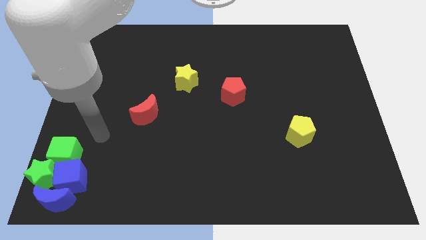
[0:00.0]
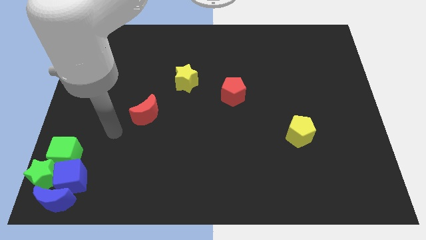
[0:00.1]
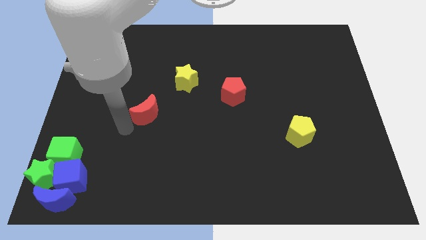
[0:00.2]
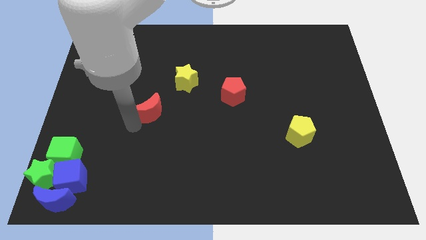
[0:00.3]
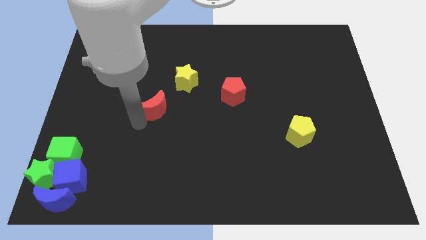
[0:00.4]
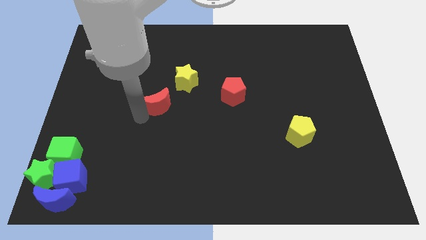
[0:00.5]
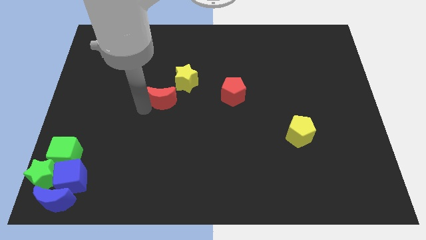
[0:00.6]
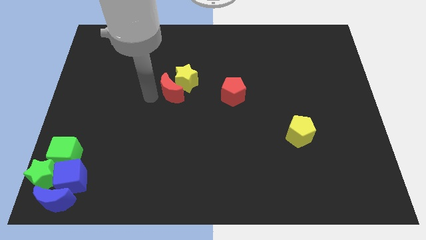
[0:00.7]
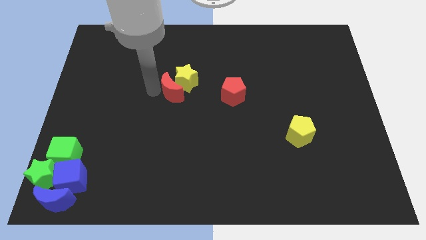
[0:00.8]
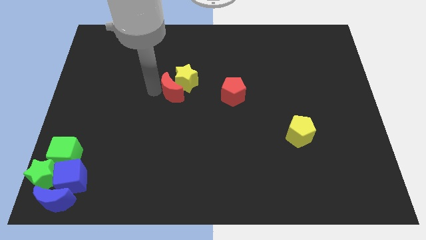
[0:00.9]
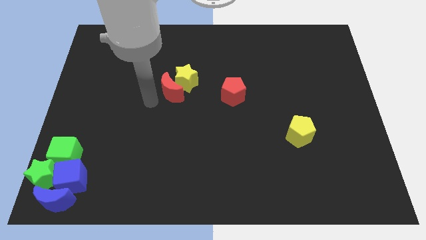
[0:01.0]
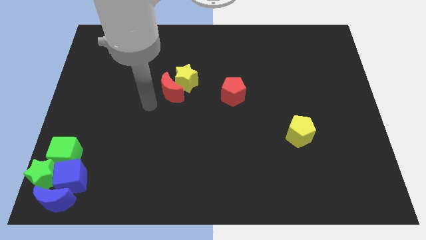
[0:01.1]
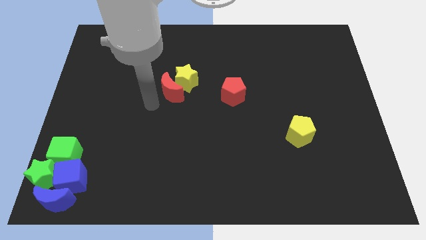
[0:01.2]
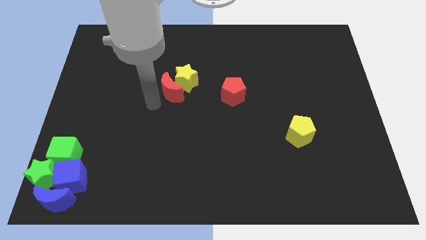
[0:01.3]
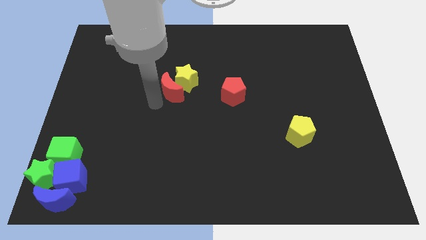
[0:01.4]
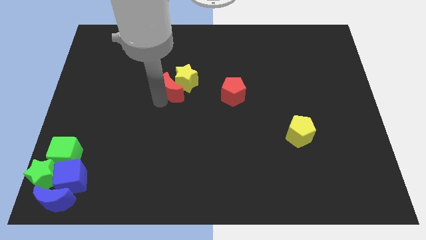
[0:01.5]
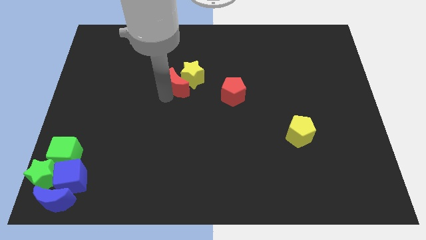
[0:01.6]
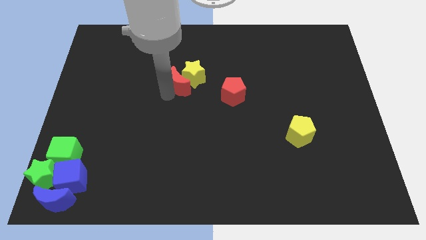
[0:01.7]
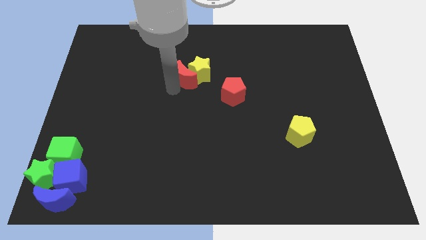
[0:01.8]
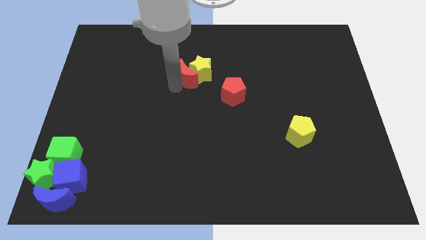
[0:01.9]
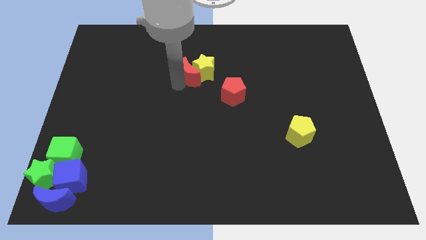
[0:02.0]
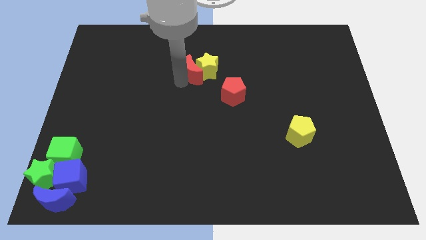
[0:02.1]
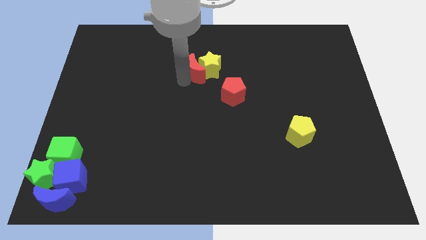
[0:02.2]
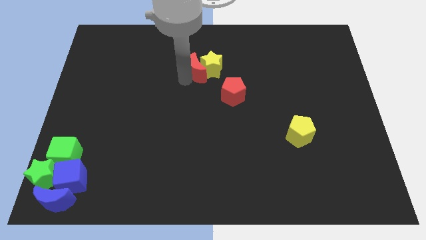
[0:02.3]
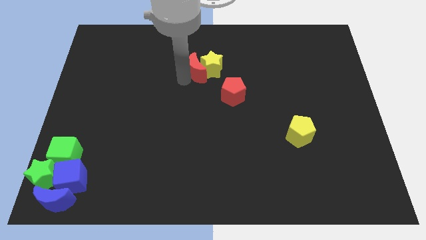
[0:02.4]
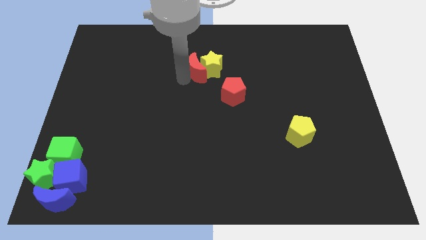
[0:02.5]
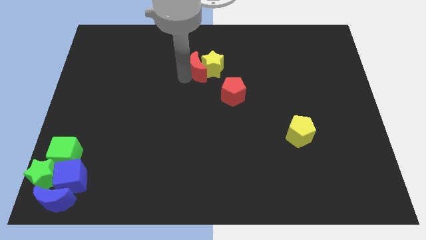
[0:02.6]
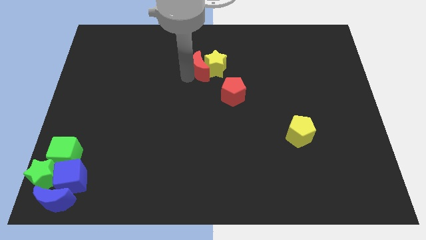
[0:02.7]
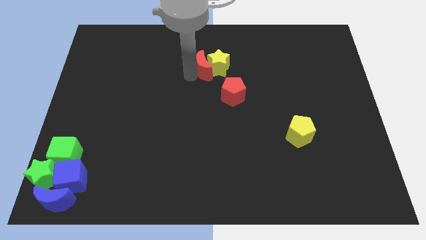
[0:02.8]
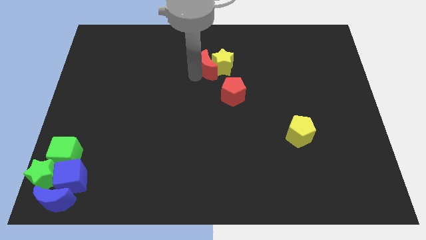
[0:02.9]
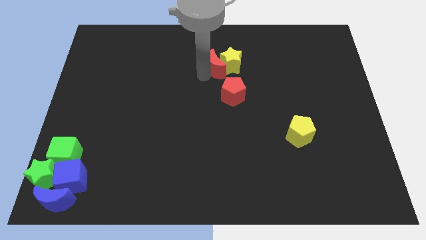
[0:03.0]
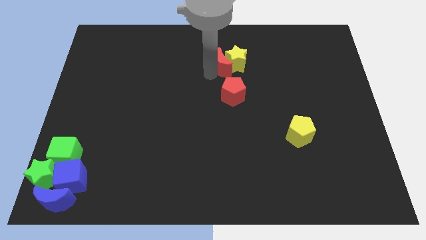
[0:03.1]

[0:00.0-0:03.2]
push the red moon and yellow star to the top side of the red pentagon

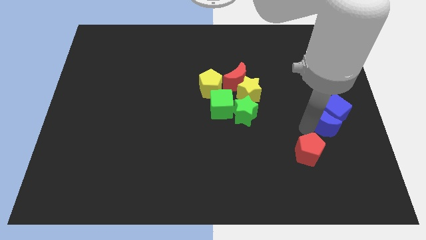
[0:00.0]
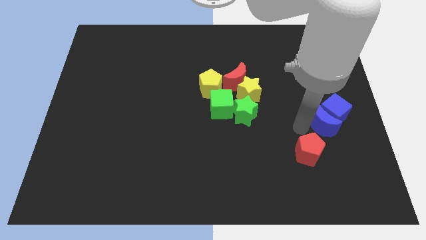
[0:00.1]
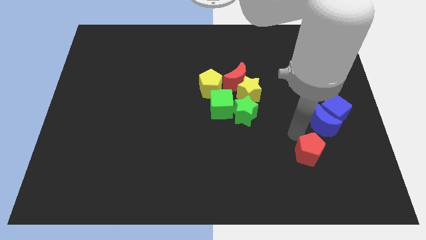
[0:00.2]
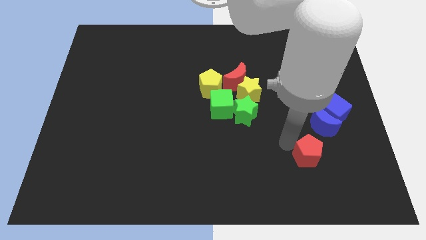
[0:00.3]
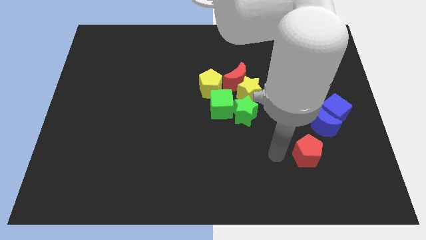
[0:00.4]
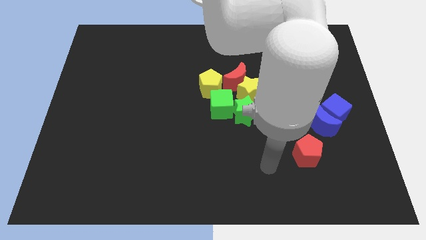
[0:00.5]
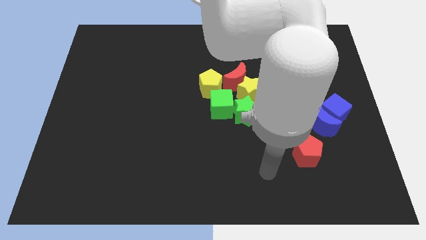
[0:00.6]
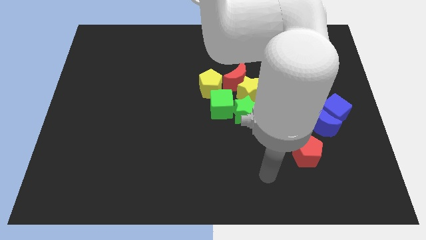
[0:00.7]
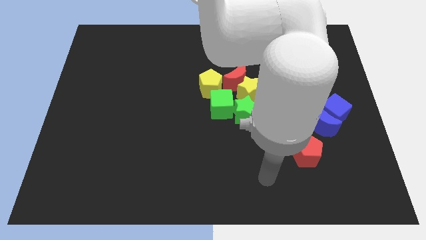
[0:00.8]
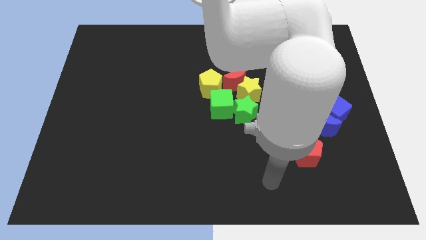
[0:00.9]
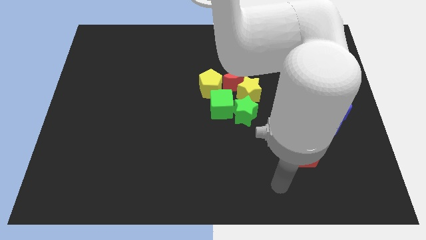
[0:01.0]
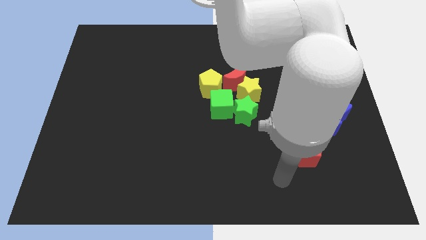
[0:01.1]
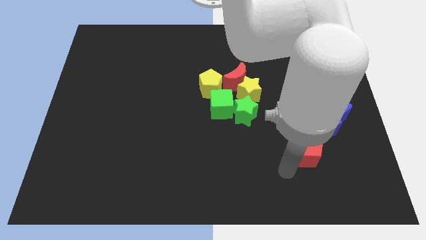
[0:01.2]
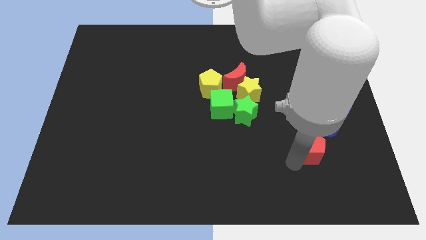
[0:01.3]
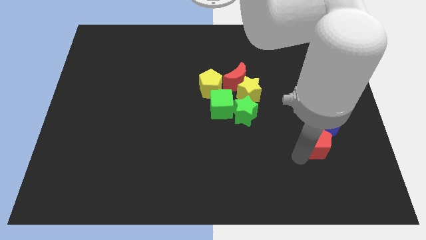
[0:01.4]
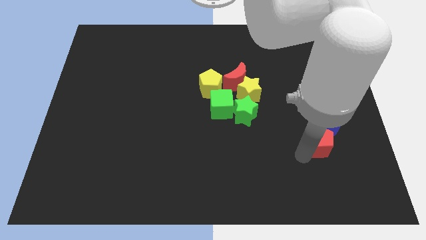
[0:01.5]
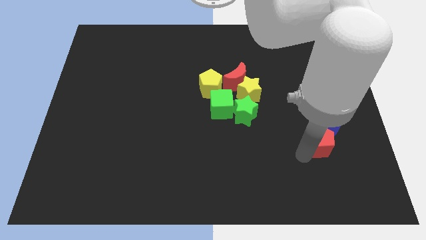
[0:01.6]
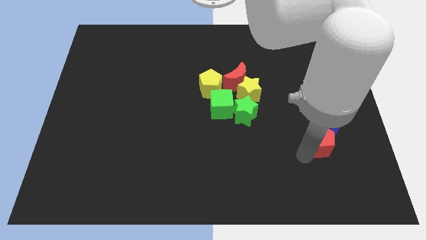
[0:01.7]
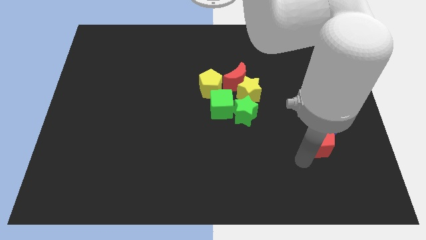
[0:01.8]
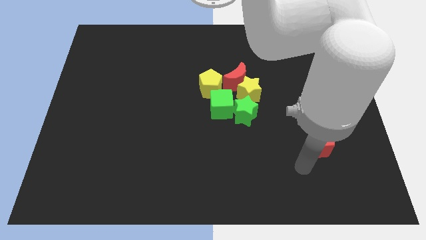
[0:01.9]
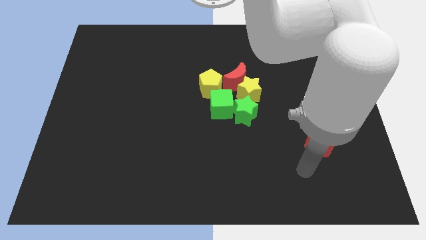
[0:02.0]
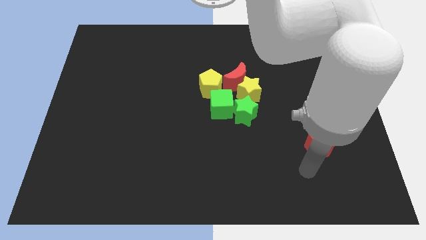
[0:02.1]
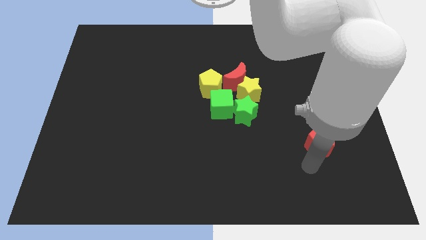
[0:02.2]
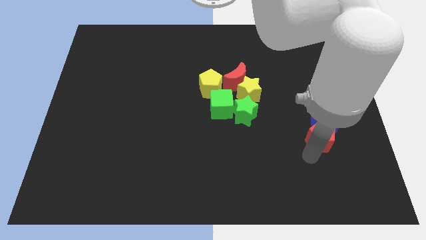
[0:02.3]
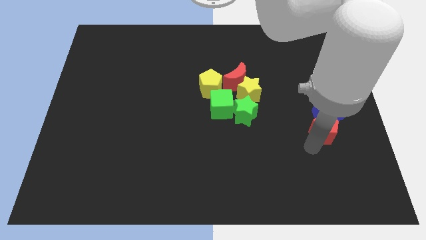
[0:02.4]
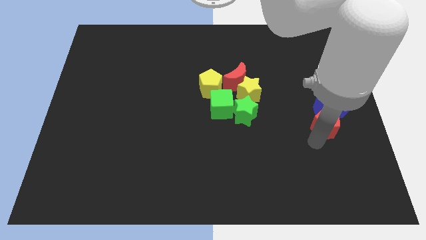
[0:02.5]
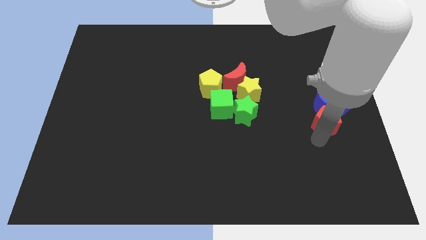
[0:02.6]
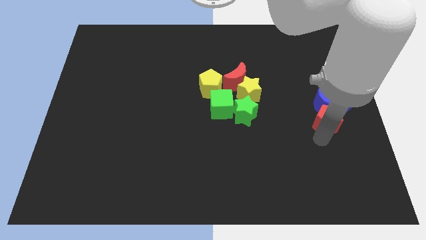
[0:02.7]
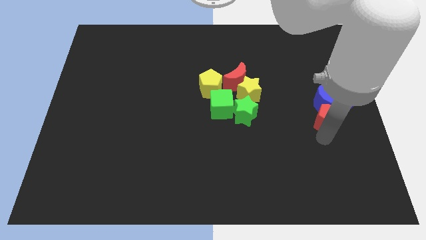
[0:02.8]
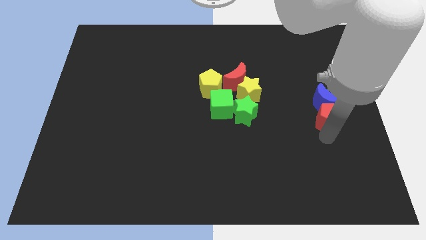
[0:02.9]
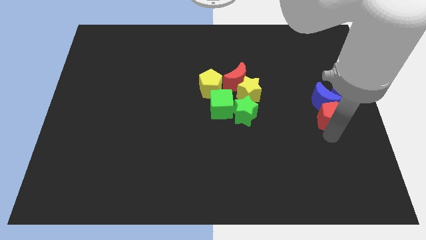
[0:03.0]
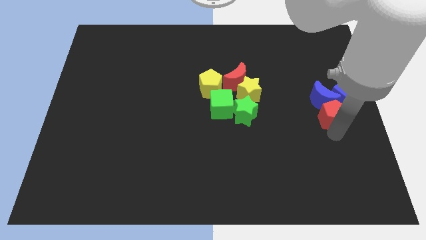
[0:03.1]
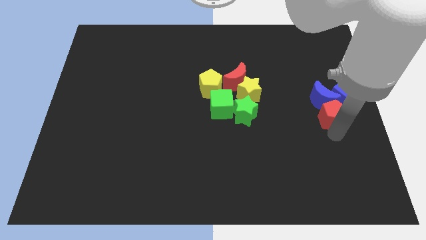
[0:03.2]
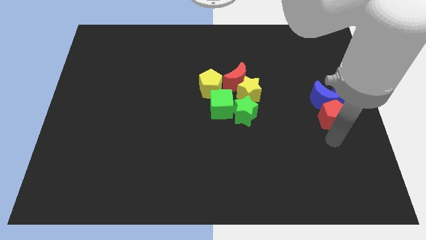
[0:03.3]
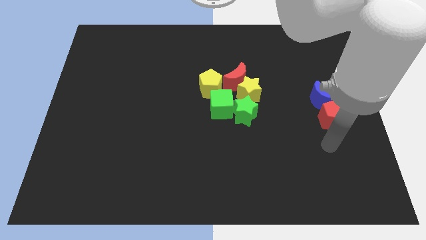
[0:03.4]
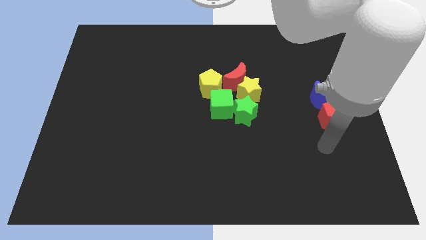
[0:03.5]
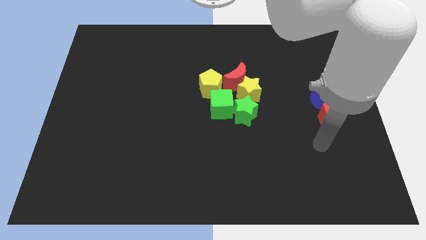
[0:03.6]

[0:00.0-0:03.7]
move the blue cube to the center right with the red pentagon

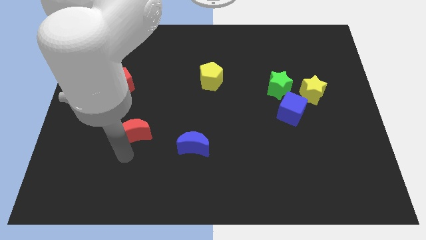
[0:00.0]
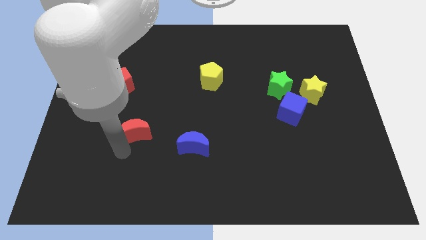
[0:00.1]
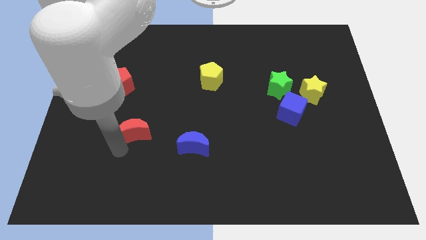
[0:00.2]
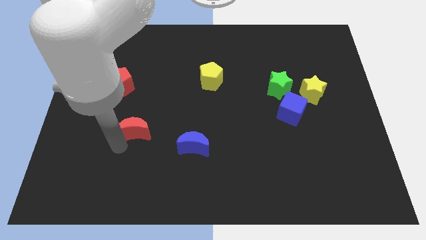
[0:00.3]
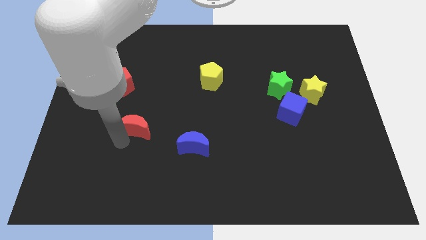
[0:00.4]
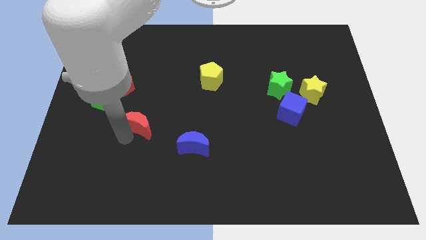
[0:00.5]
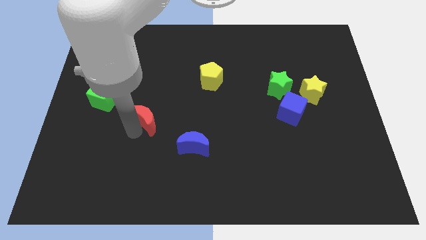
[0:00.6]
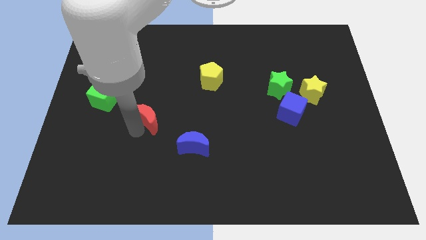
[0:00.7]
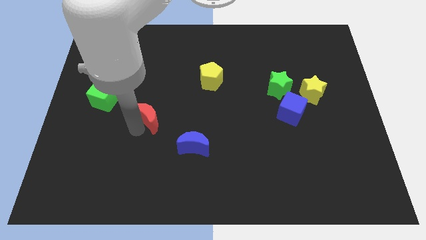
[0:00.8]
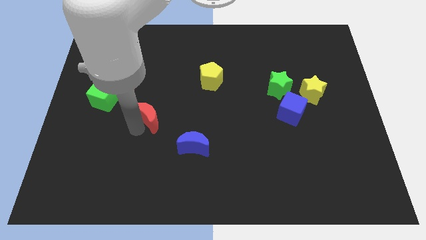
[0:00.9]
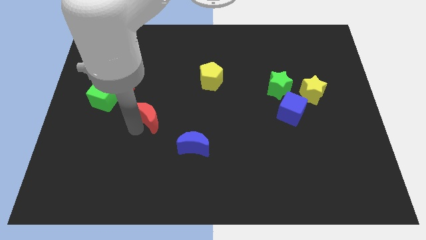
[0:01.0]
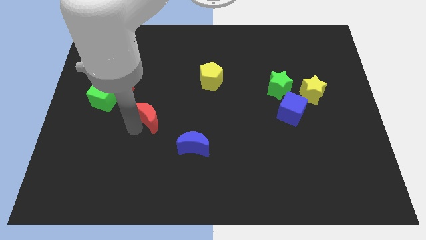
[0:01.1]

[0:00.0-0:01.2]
move the red moon diagonal to the green cube

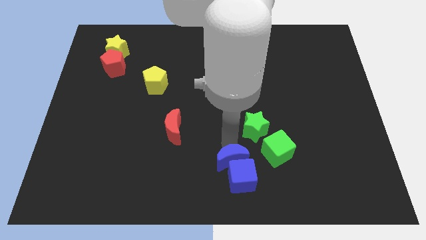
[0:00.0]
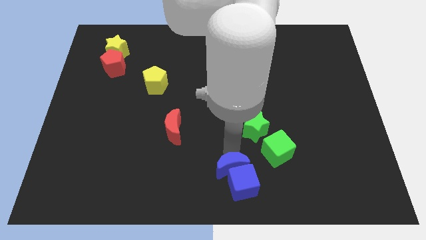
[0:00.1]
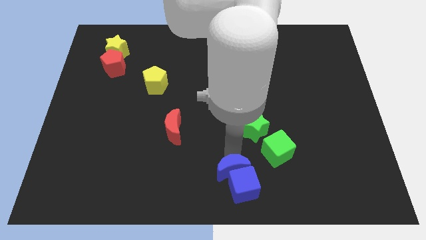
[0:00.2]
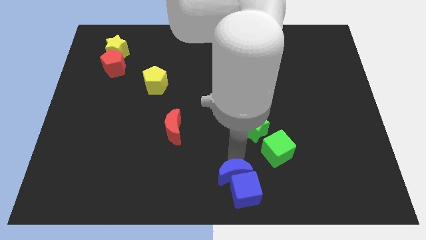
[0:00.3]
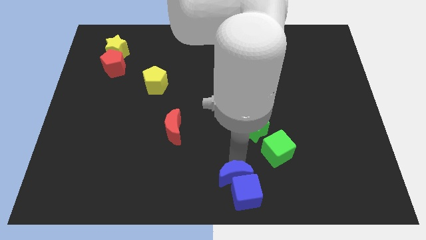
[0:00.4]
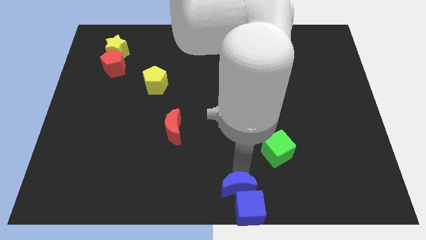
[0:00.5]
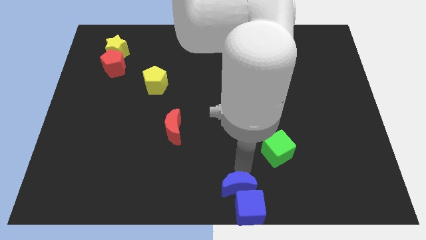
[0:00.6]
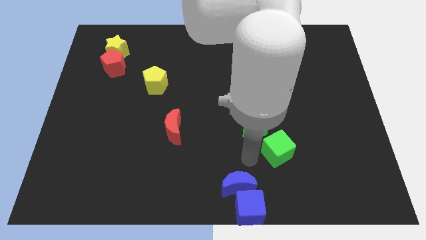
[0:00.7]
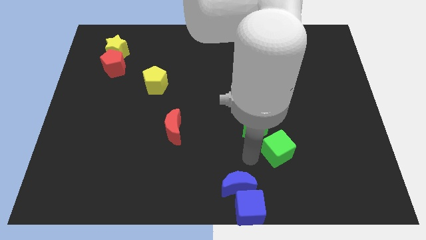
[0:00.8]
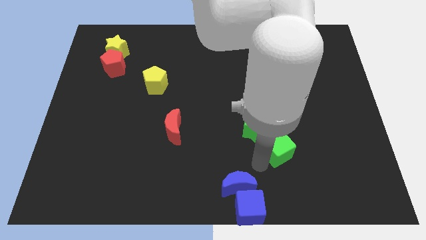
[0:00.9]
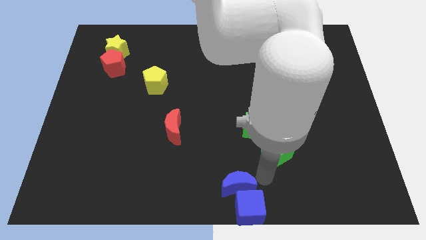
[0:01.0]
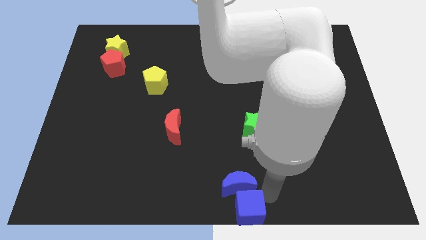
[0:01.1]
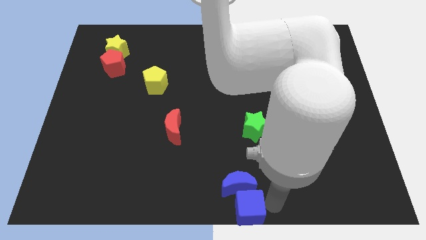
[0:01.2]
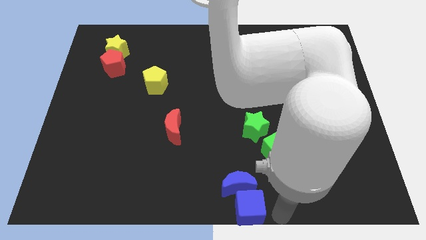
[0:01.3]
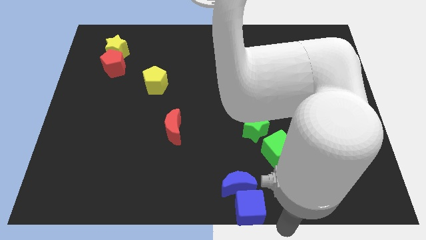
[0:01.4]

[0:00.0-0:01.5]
slide the blue crescent and blue cube to the bottom center of the board
